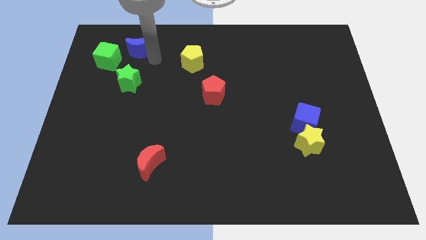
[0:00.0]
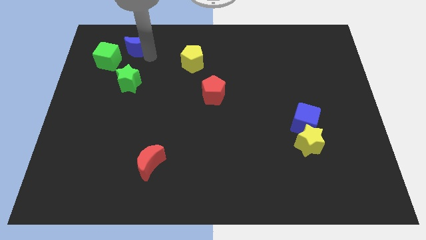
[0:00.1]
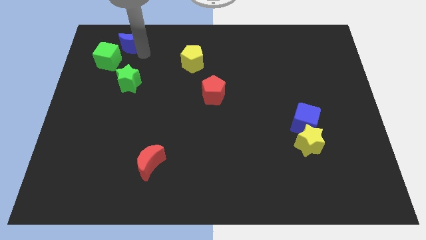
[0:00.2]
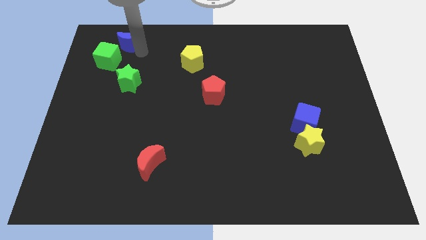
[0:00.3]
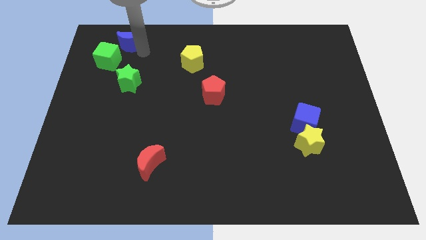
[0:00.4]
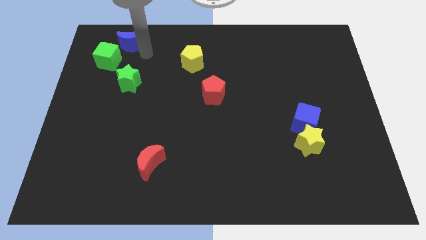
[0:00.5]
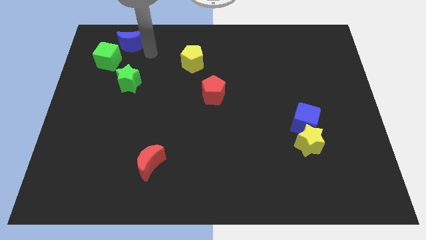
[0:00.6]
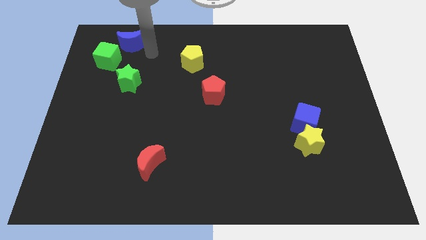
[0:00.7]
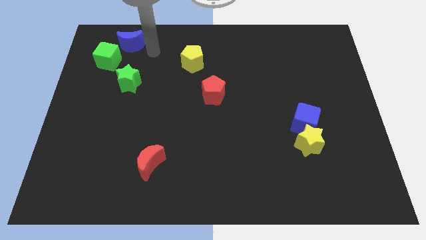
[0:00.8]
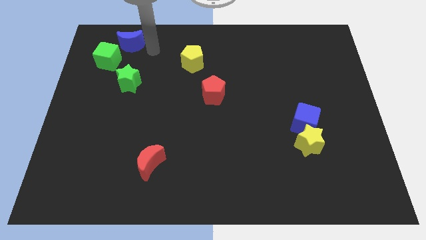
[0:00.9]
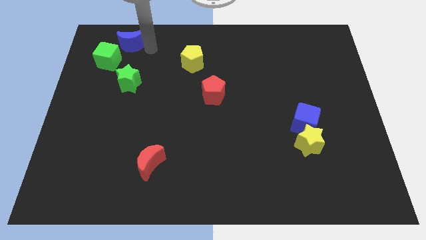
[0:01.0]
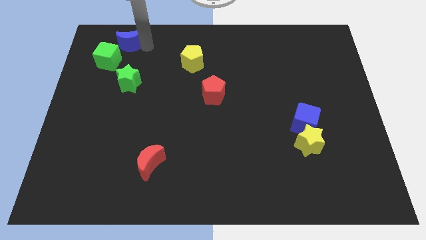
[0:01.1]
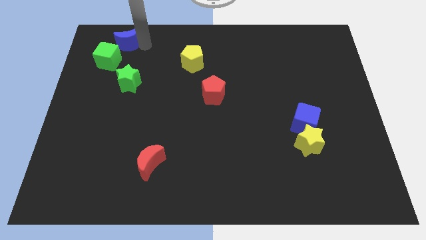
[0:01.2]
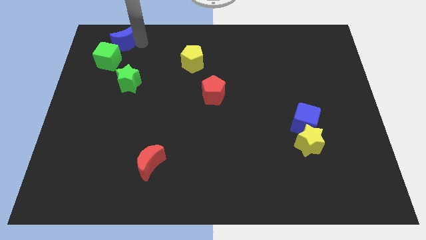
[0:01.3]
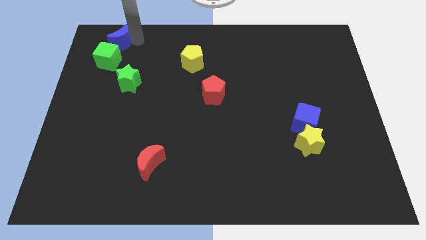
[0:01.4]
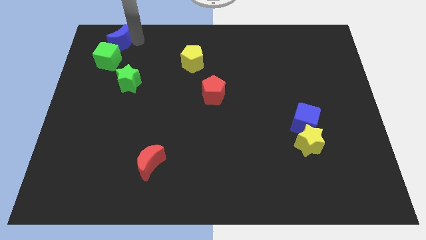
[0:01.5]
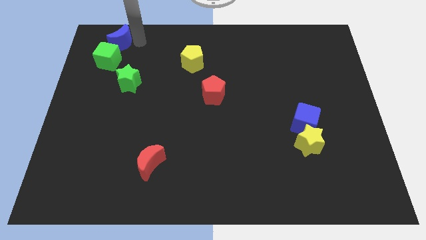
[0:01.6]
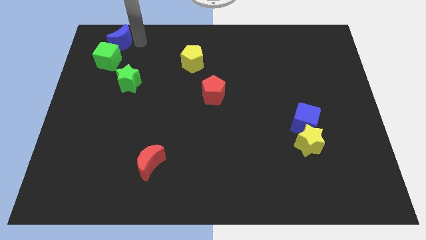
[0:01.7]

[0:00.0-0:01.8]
move the blue crescent to the top side of the green cube

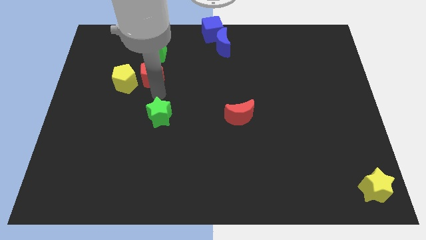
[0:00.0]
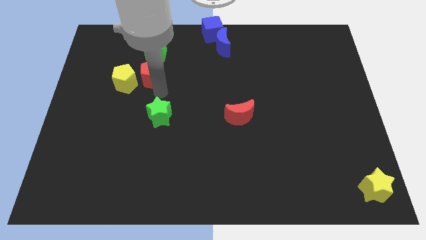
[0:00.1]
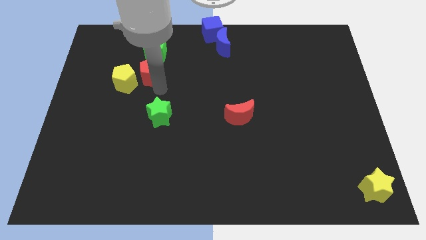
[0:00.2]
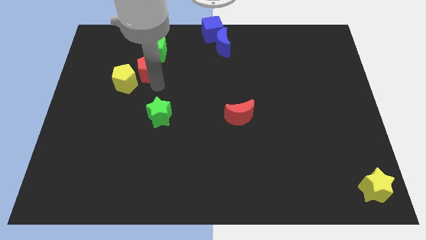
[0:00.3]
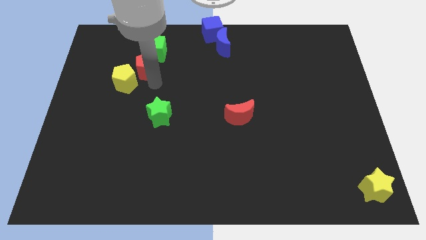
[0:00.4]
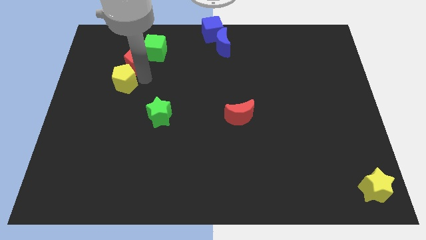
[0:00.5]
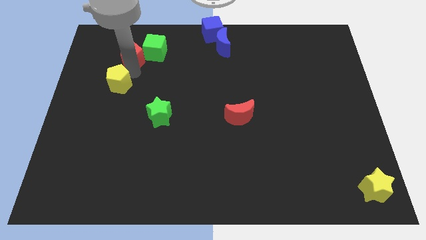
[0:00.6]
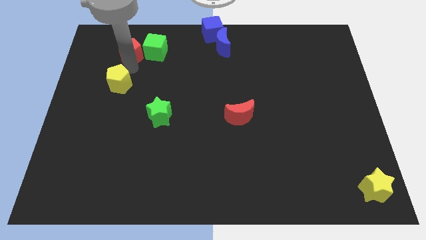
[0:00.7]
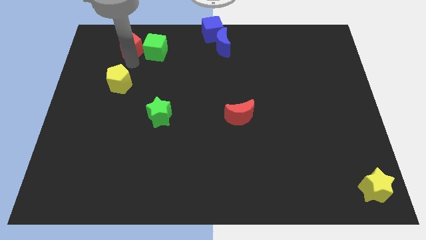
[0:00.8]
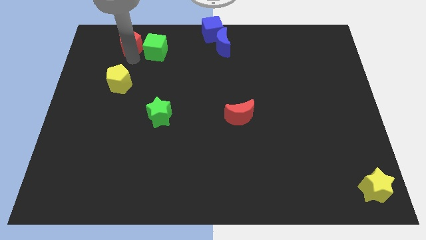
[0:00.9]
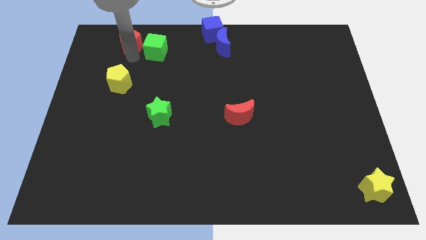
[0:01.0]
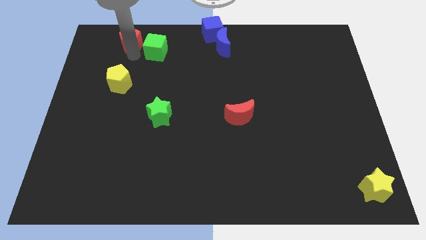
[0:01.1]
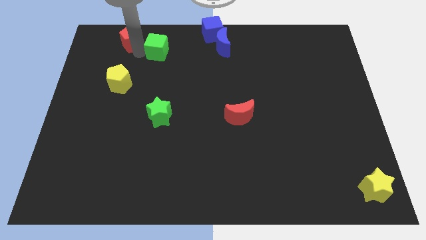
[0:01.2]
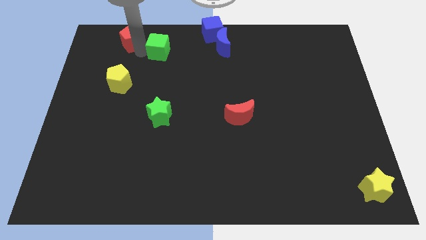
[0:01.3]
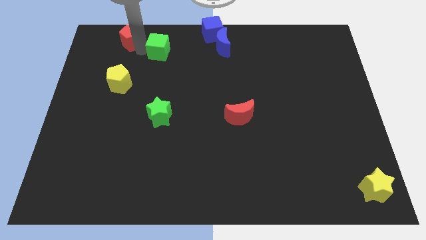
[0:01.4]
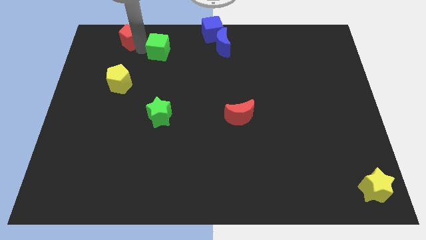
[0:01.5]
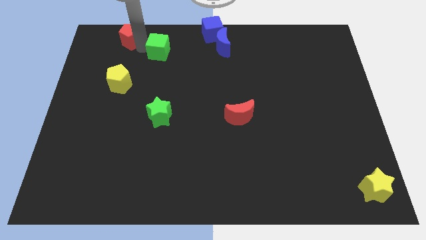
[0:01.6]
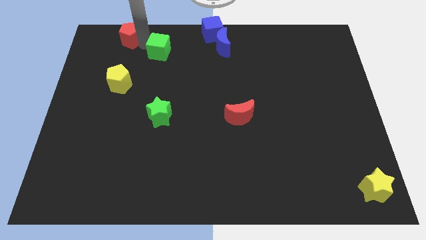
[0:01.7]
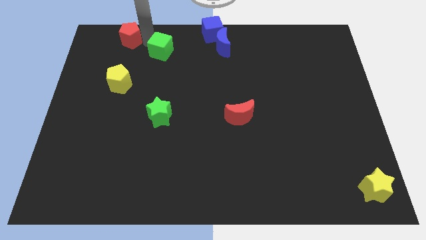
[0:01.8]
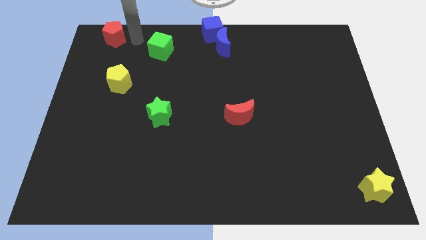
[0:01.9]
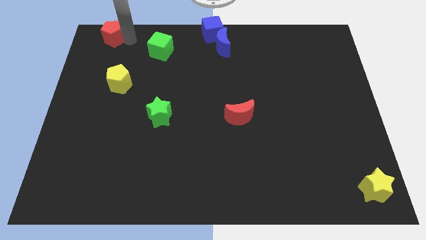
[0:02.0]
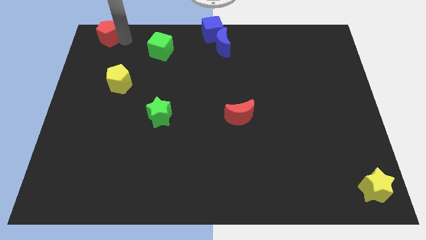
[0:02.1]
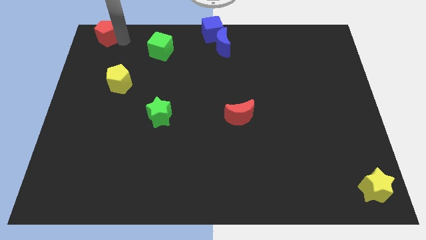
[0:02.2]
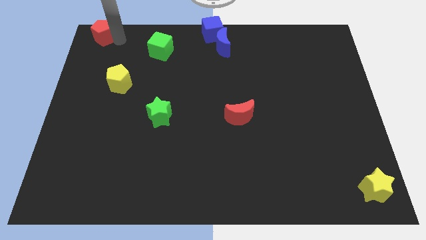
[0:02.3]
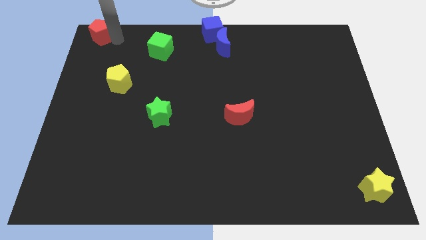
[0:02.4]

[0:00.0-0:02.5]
place the red pentagon above the yellow pentagon

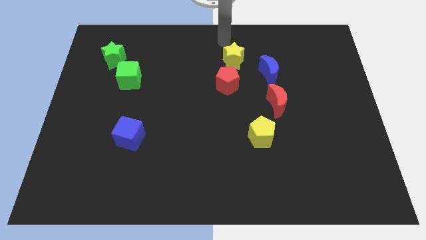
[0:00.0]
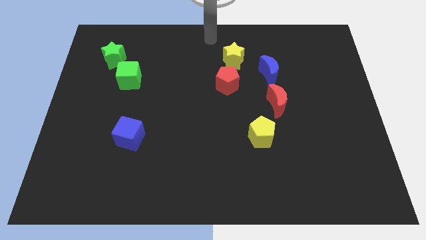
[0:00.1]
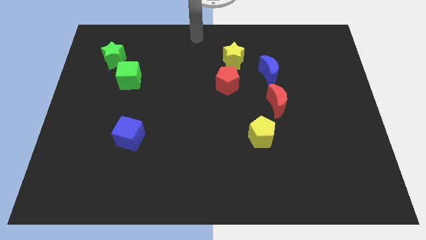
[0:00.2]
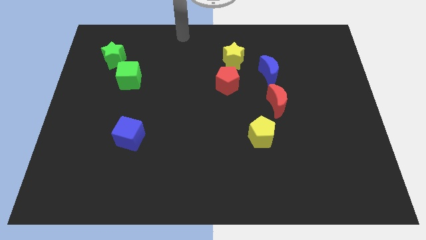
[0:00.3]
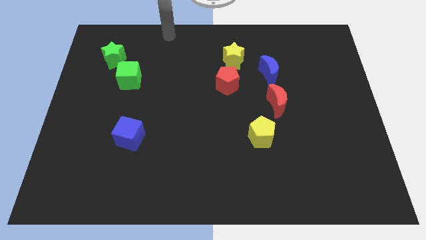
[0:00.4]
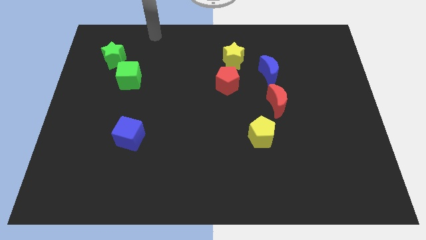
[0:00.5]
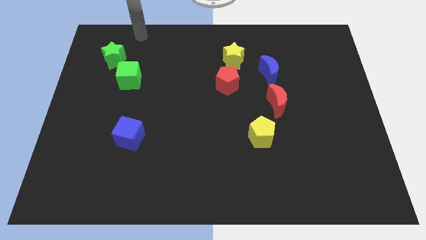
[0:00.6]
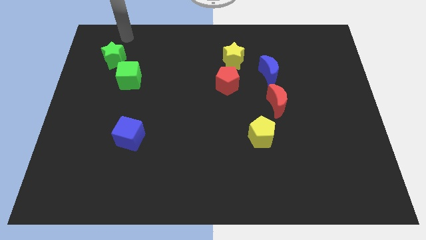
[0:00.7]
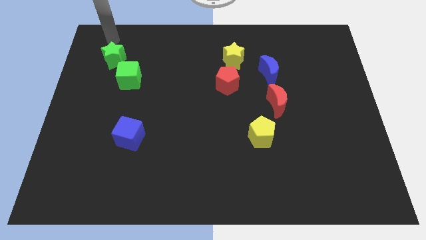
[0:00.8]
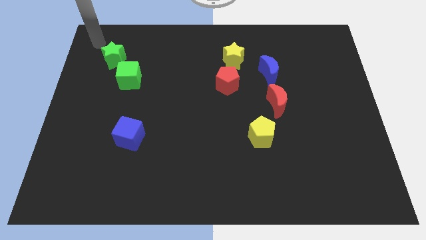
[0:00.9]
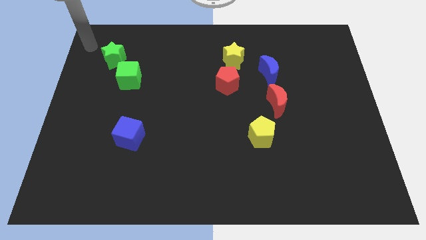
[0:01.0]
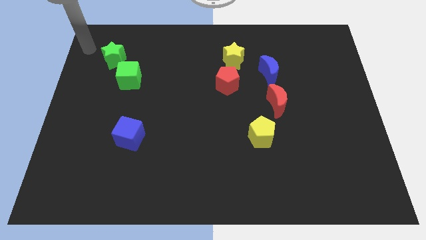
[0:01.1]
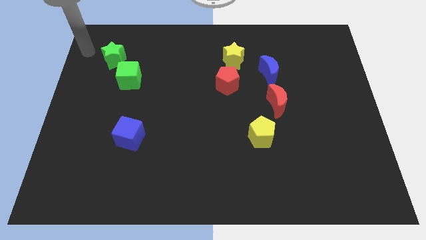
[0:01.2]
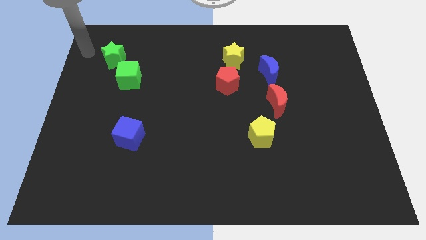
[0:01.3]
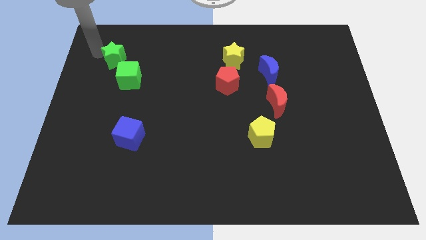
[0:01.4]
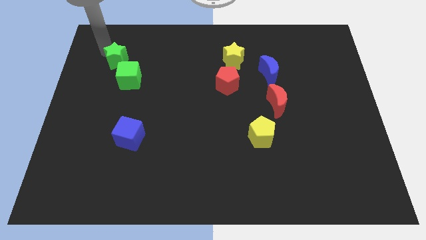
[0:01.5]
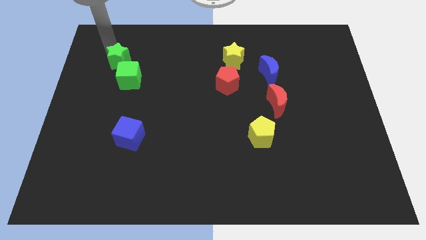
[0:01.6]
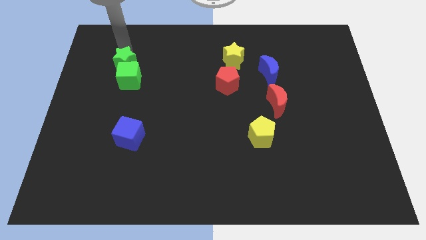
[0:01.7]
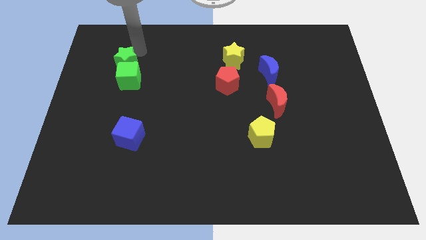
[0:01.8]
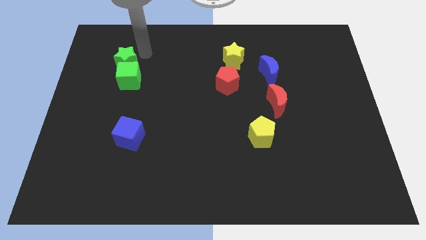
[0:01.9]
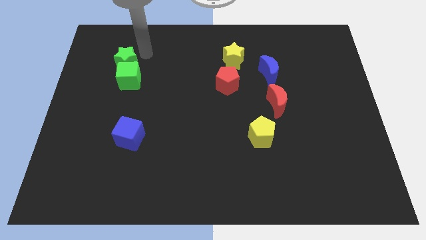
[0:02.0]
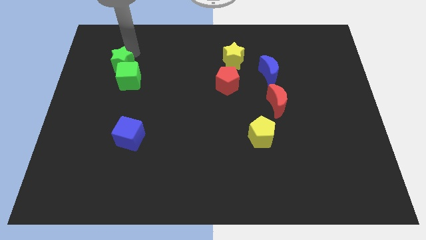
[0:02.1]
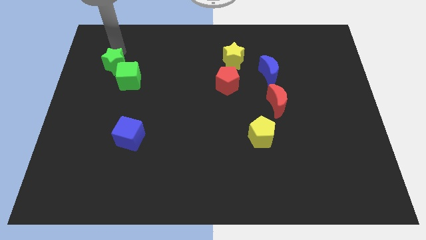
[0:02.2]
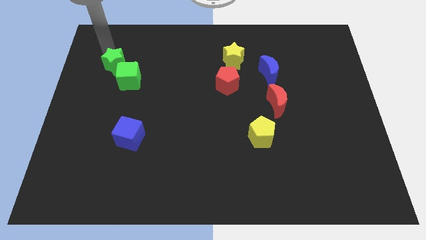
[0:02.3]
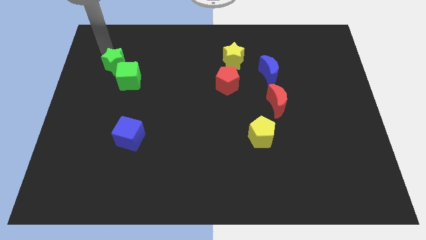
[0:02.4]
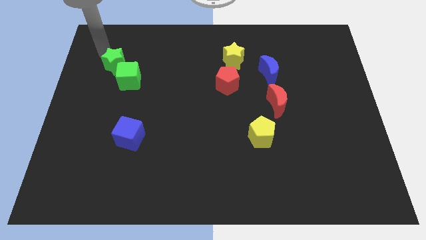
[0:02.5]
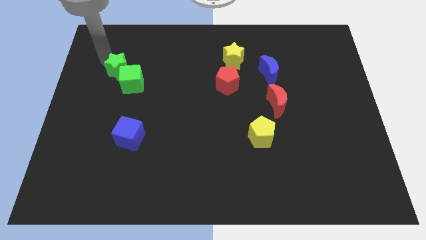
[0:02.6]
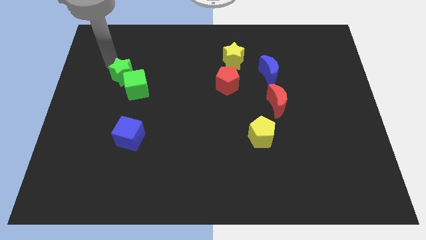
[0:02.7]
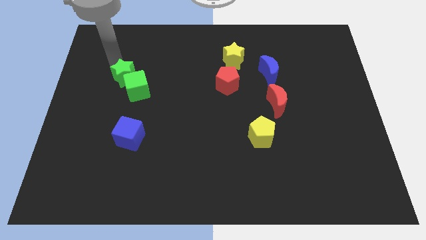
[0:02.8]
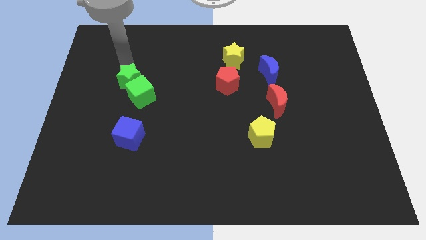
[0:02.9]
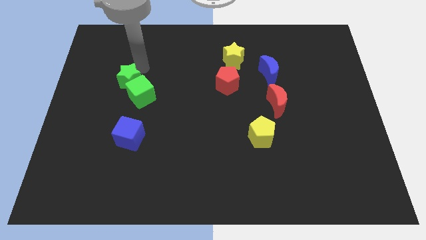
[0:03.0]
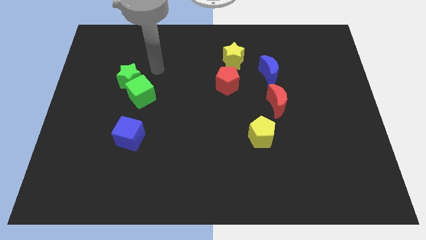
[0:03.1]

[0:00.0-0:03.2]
slide the green star along with the green cube towards the center

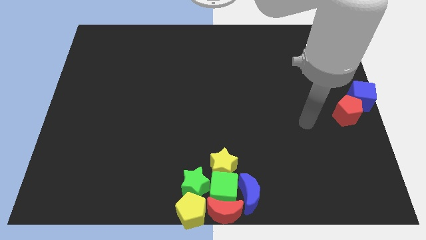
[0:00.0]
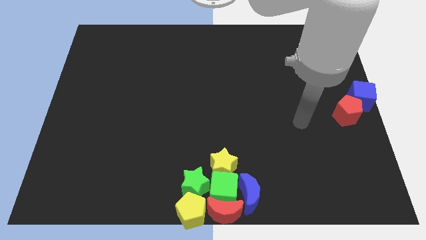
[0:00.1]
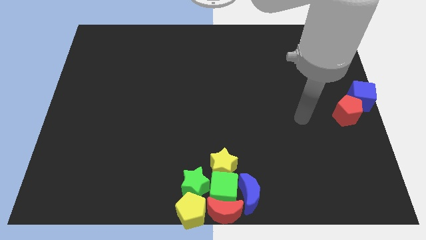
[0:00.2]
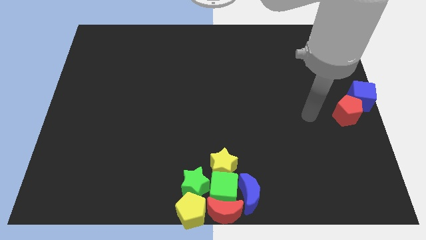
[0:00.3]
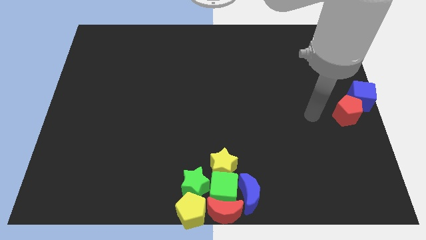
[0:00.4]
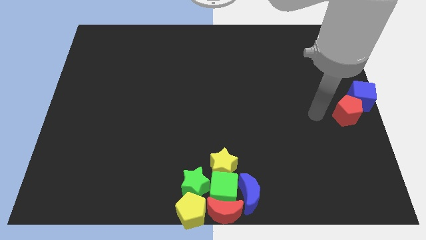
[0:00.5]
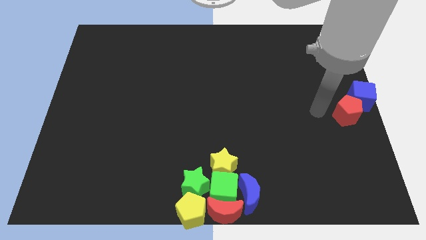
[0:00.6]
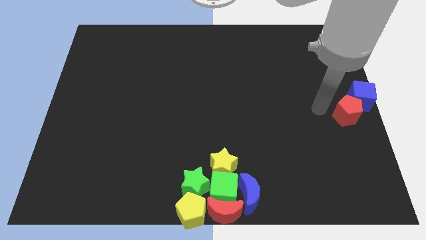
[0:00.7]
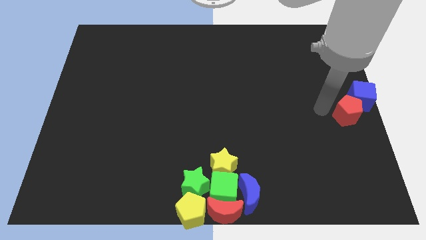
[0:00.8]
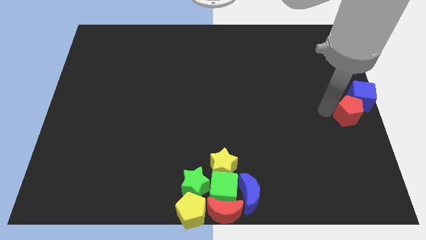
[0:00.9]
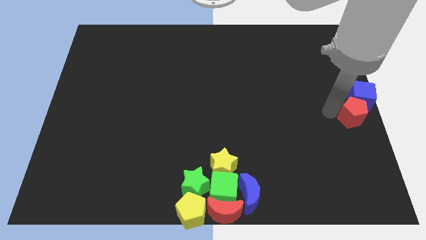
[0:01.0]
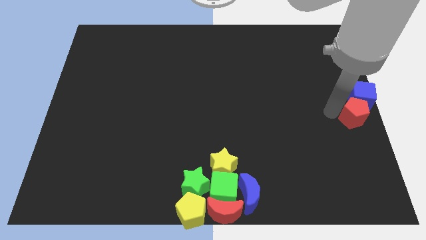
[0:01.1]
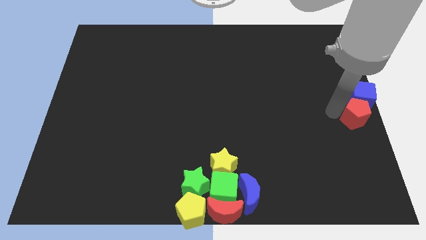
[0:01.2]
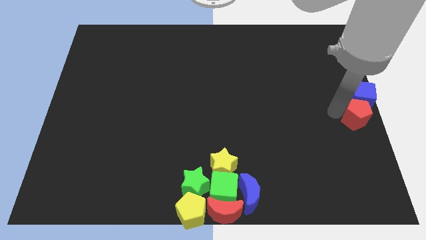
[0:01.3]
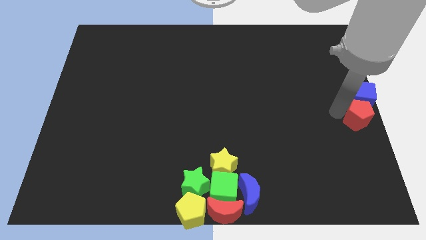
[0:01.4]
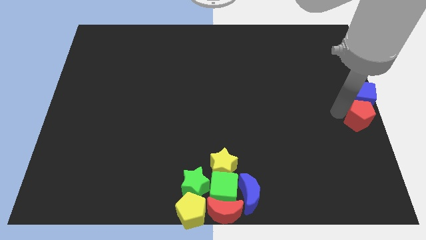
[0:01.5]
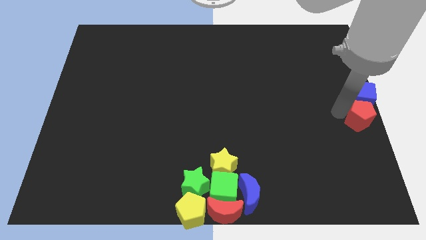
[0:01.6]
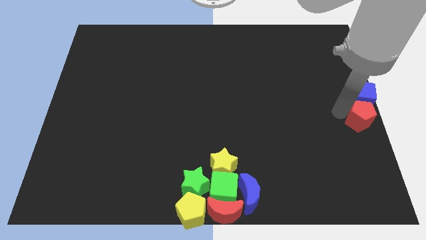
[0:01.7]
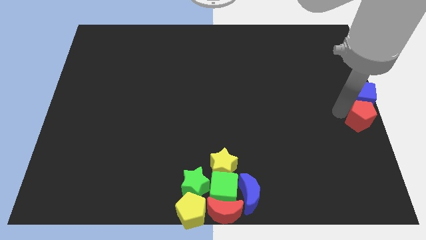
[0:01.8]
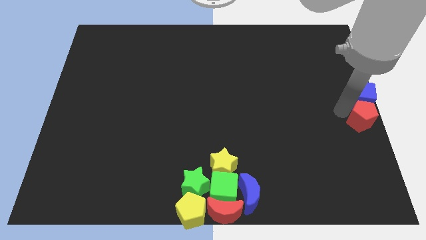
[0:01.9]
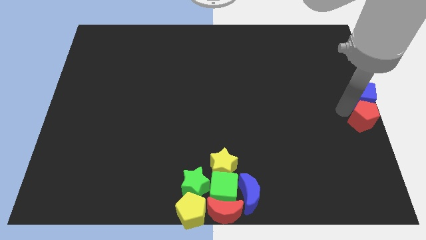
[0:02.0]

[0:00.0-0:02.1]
place the red pentagon below the blue cube
